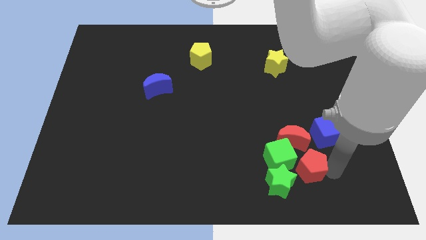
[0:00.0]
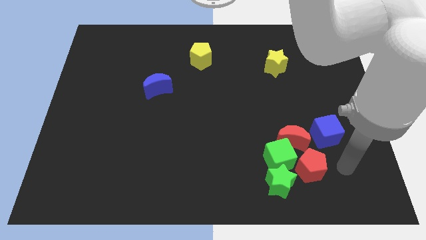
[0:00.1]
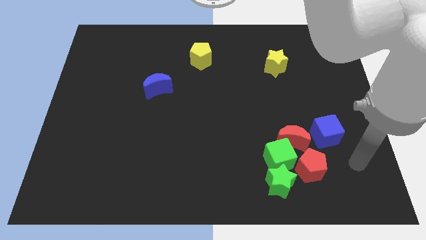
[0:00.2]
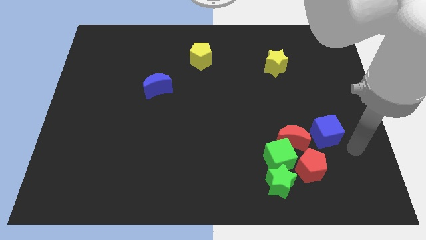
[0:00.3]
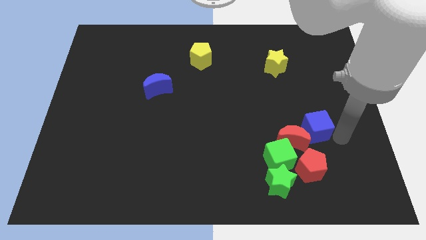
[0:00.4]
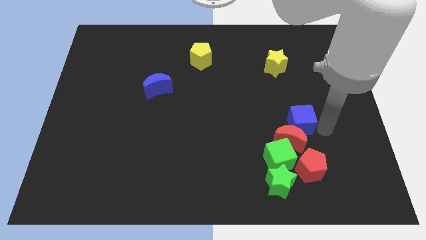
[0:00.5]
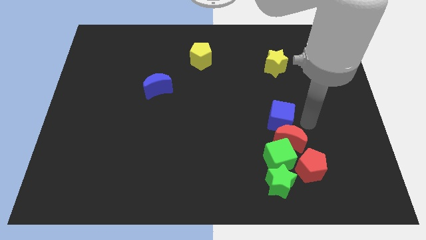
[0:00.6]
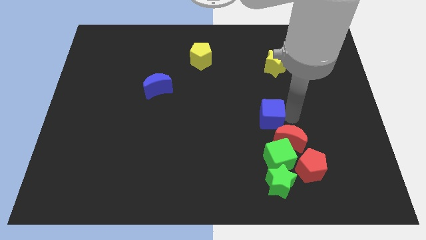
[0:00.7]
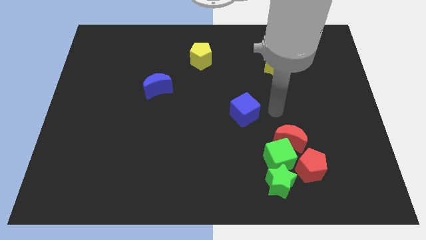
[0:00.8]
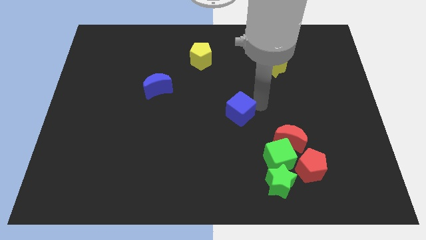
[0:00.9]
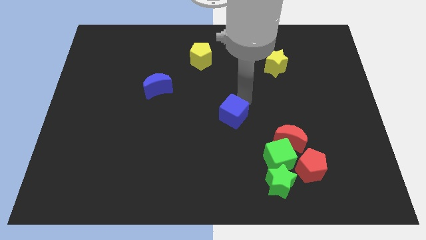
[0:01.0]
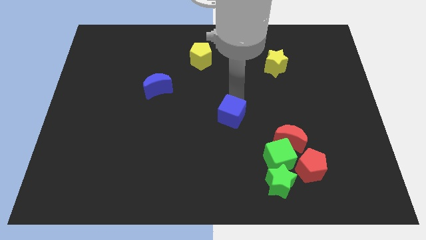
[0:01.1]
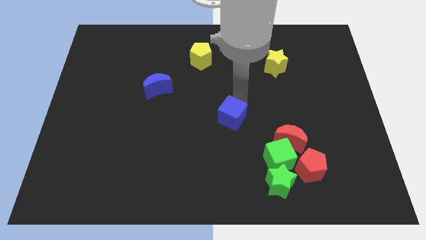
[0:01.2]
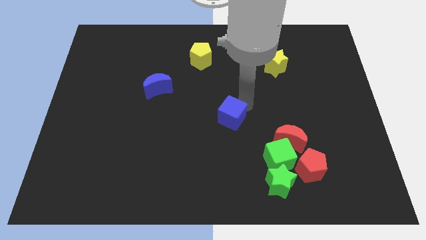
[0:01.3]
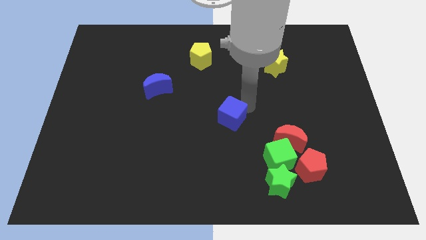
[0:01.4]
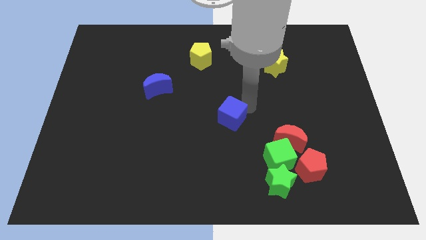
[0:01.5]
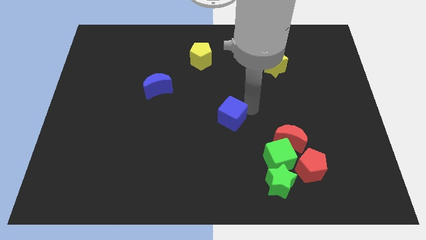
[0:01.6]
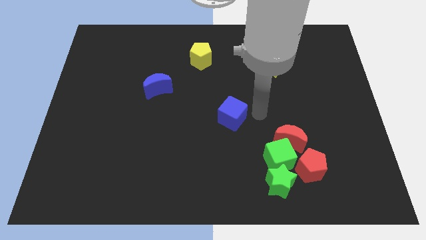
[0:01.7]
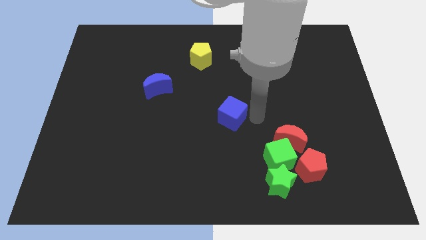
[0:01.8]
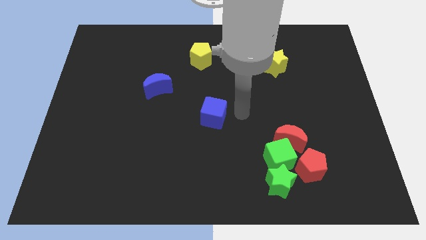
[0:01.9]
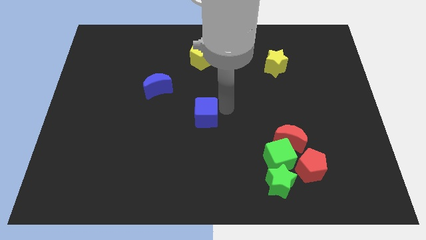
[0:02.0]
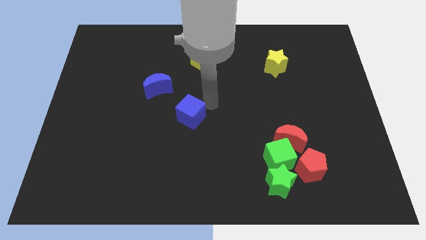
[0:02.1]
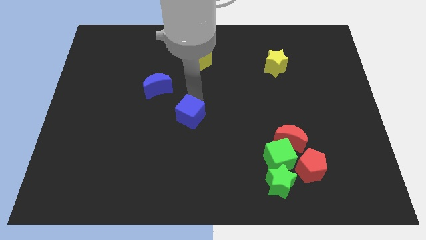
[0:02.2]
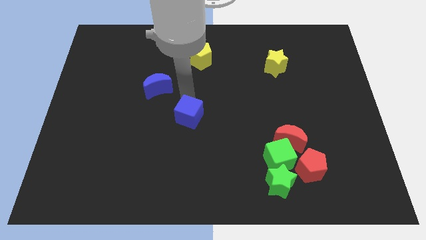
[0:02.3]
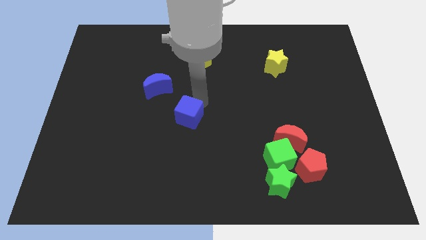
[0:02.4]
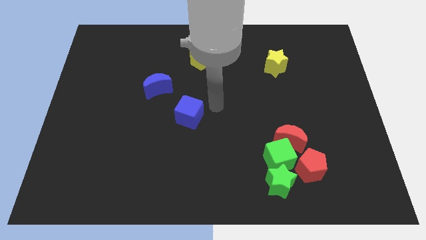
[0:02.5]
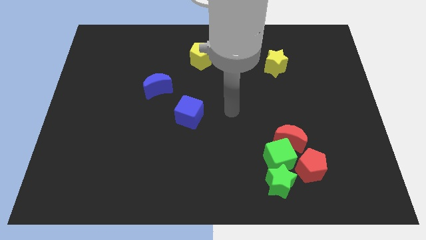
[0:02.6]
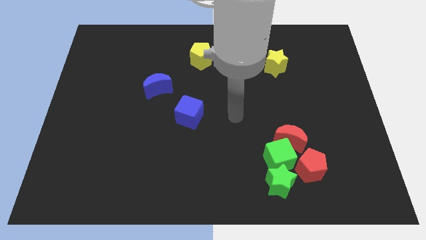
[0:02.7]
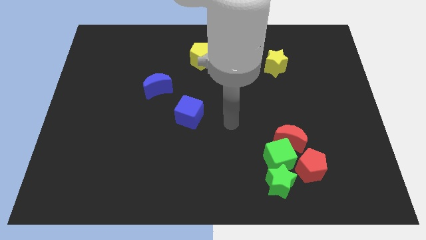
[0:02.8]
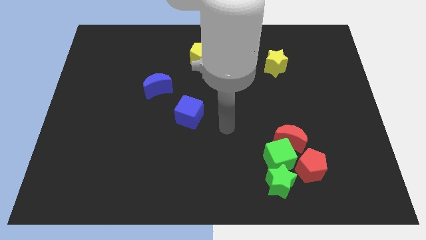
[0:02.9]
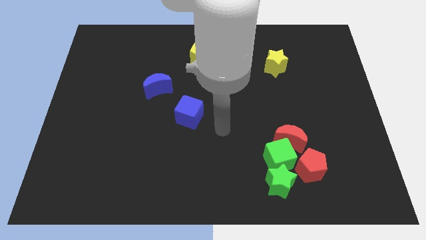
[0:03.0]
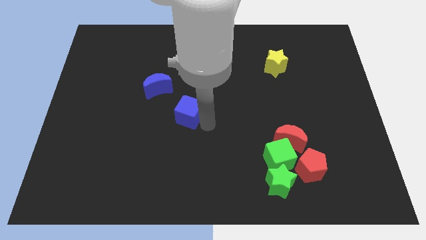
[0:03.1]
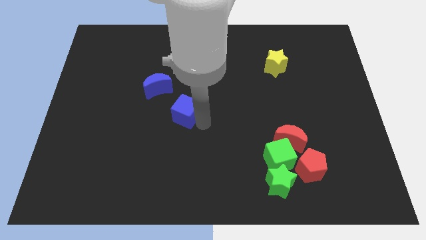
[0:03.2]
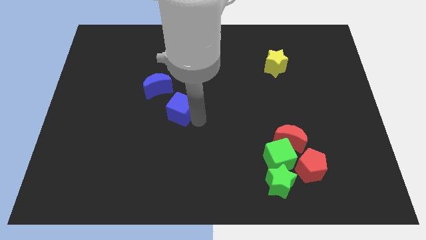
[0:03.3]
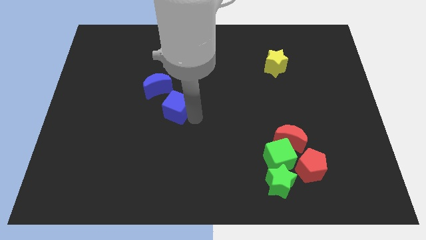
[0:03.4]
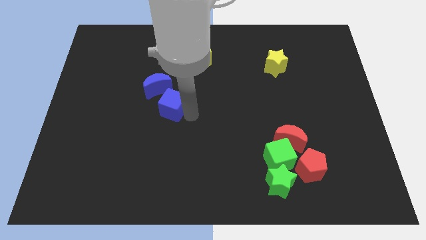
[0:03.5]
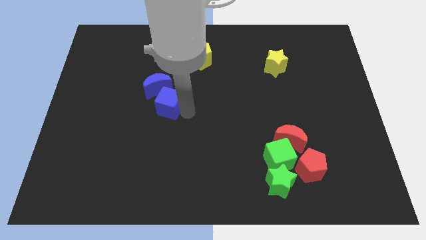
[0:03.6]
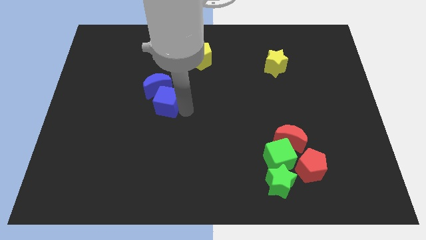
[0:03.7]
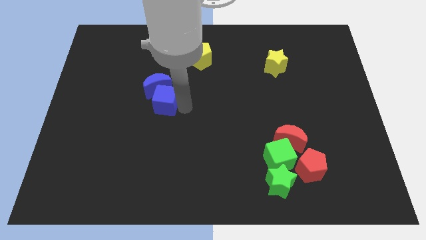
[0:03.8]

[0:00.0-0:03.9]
place the blue cube below the blue crescent

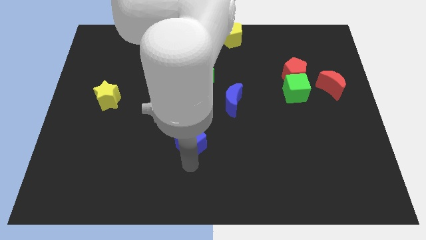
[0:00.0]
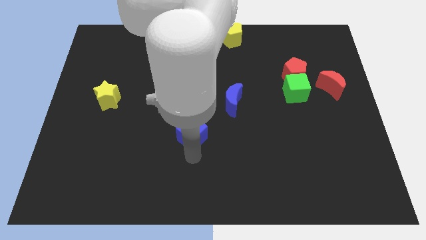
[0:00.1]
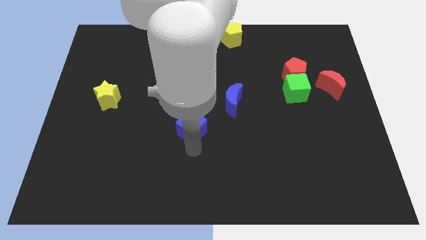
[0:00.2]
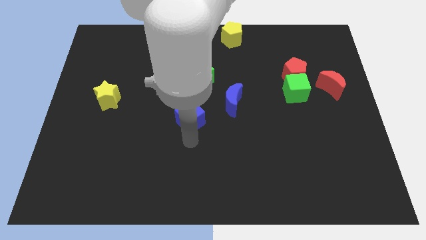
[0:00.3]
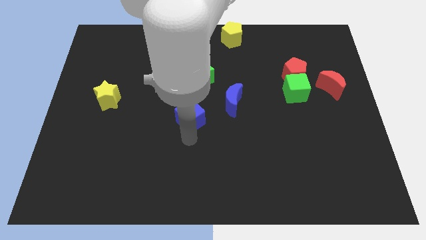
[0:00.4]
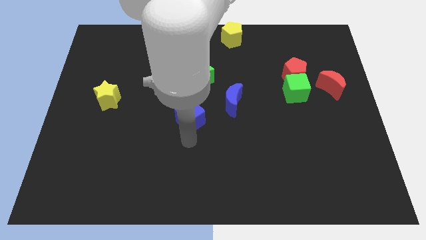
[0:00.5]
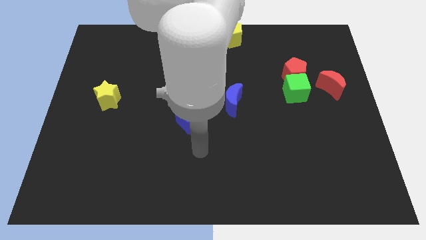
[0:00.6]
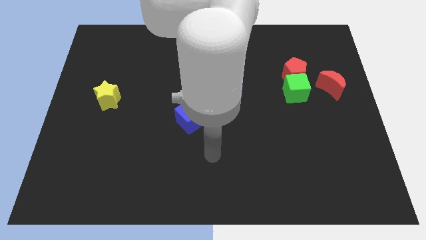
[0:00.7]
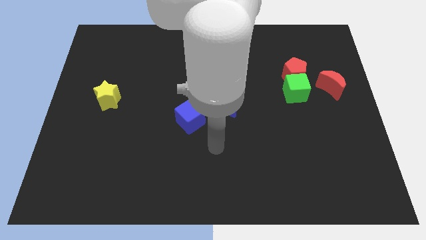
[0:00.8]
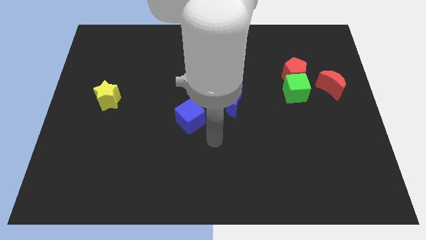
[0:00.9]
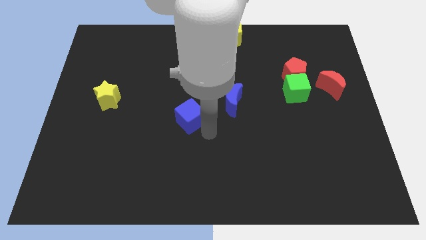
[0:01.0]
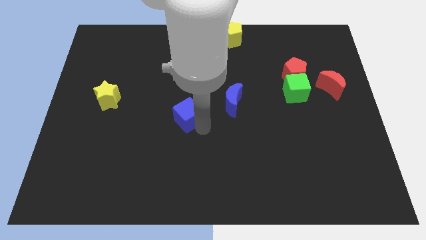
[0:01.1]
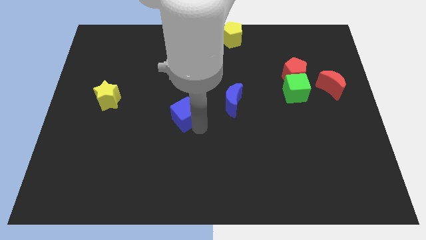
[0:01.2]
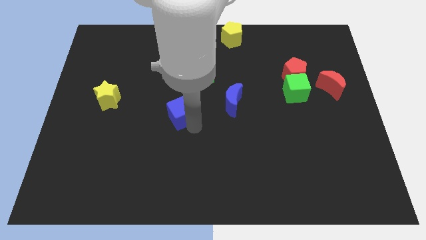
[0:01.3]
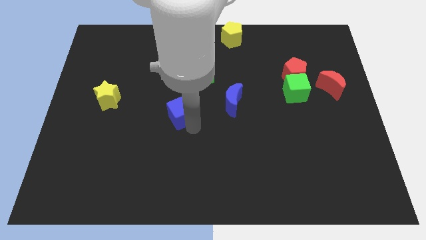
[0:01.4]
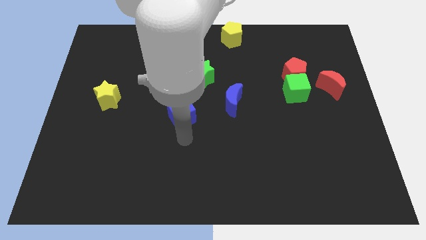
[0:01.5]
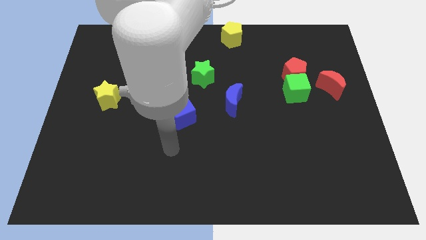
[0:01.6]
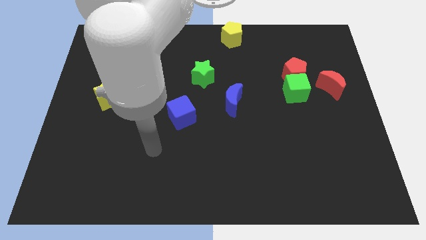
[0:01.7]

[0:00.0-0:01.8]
move the blue cube towards the top

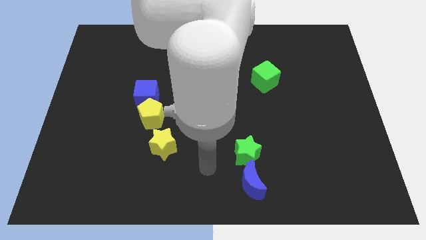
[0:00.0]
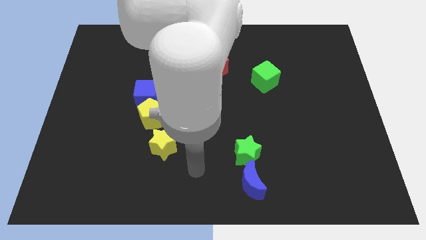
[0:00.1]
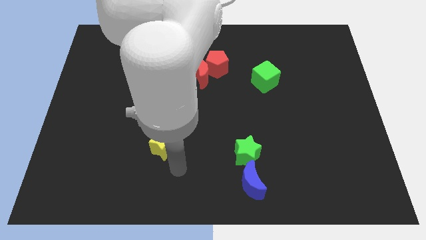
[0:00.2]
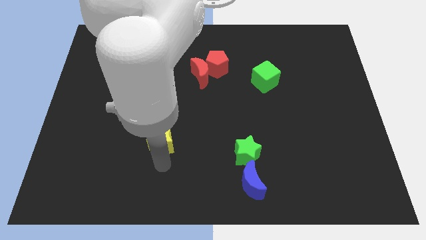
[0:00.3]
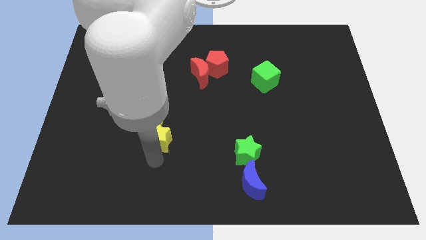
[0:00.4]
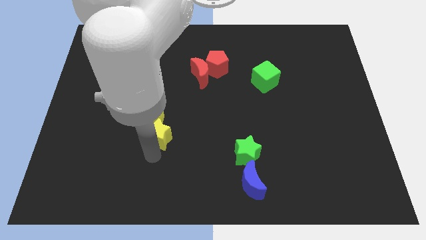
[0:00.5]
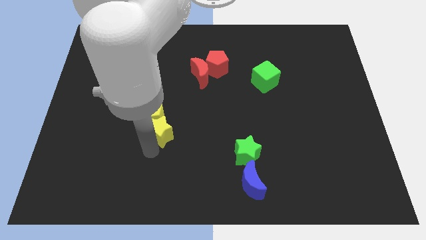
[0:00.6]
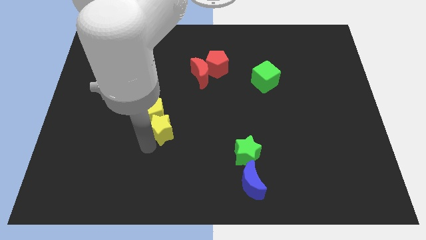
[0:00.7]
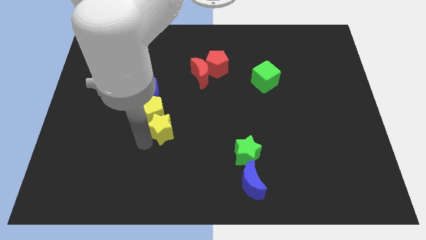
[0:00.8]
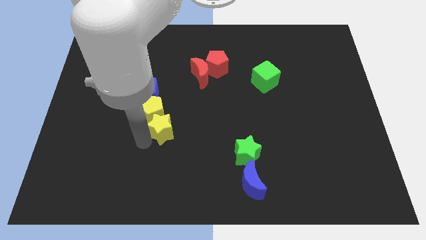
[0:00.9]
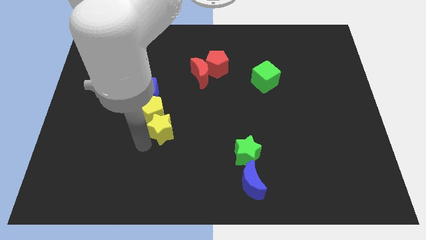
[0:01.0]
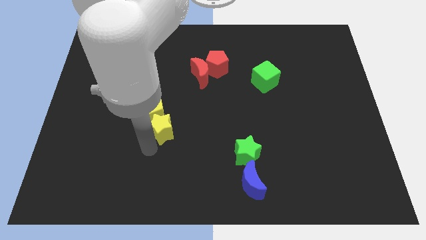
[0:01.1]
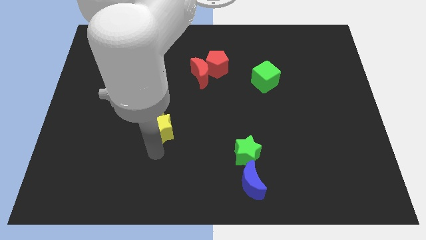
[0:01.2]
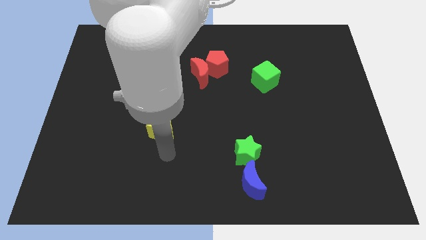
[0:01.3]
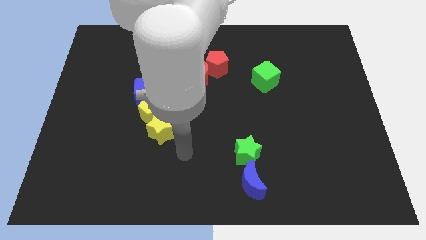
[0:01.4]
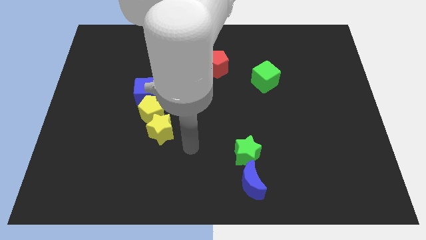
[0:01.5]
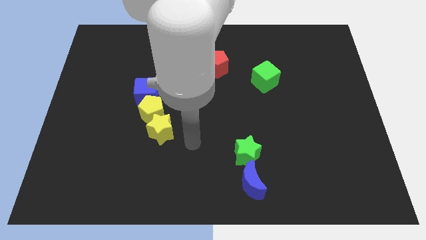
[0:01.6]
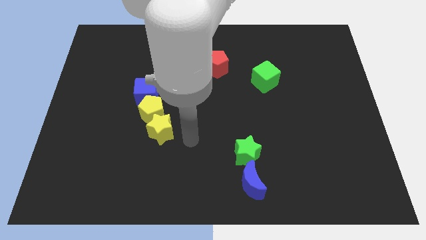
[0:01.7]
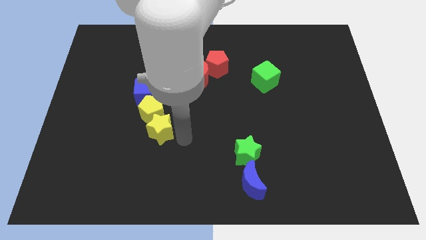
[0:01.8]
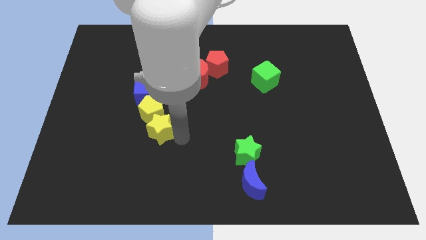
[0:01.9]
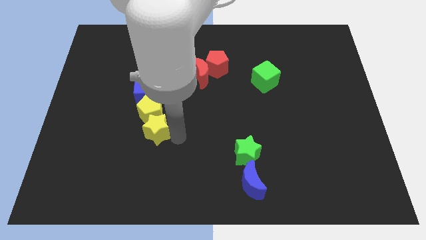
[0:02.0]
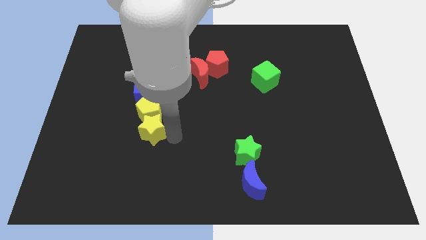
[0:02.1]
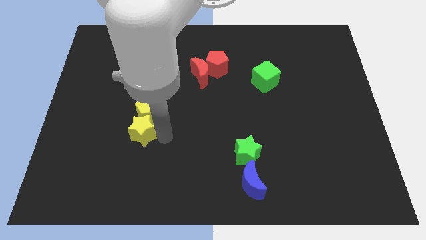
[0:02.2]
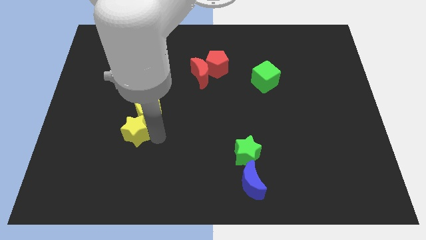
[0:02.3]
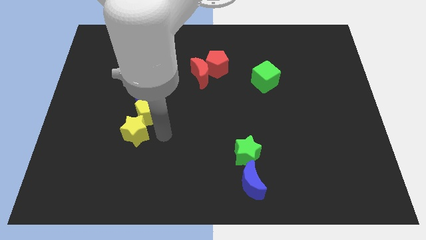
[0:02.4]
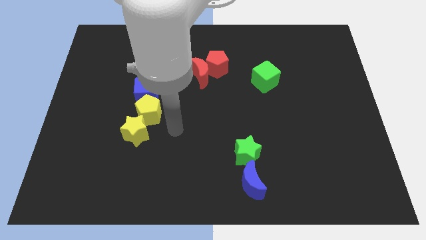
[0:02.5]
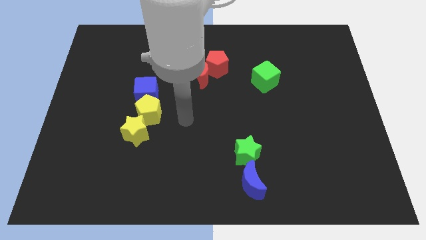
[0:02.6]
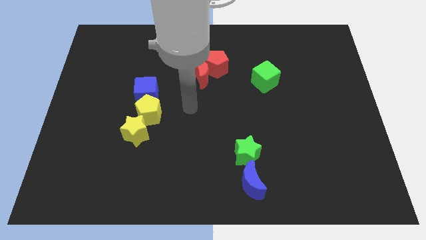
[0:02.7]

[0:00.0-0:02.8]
push the yellow star below the yellow pentagon

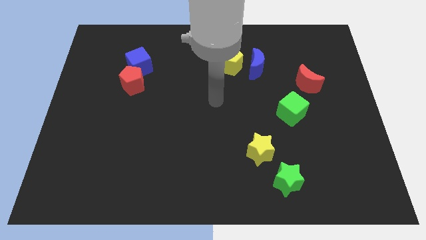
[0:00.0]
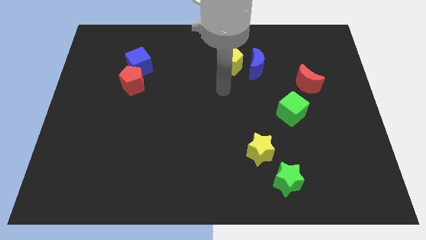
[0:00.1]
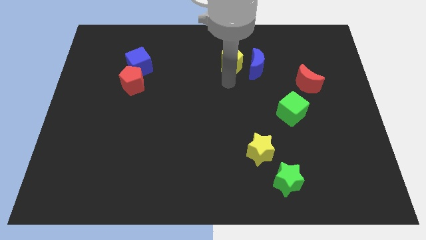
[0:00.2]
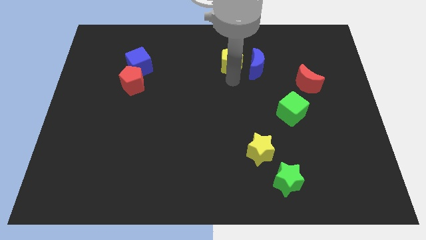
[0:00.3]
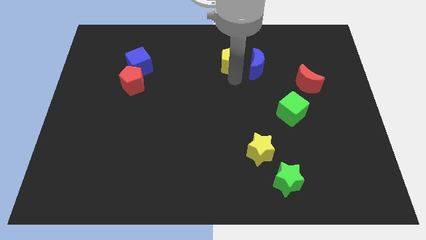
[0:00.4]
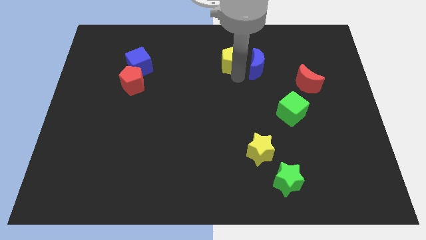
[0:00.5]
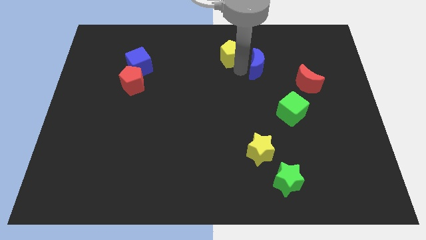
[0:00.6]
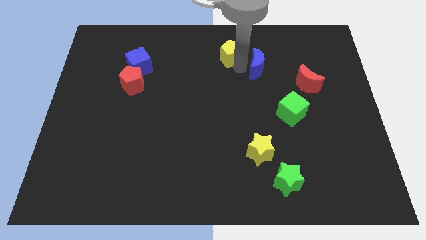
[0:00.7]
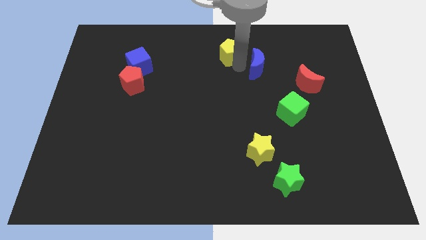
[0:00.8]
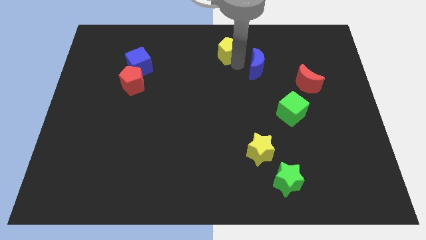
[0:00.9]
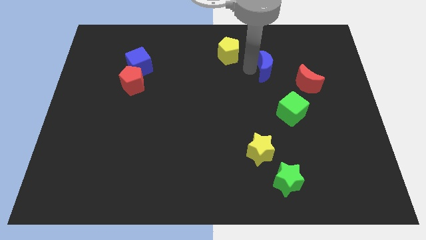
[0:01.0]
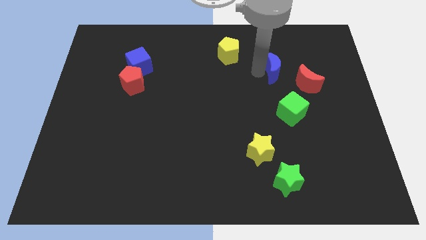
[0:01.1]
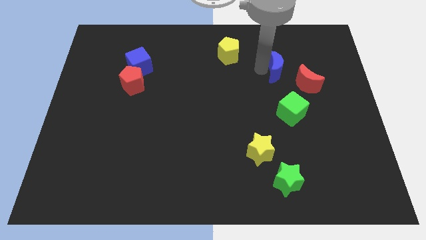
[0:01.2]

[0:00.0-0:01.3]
separate the yellow pentagon and the blue crescent
